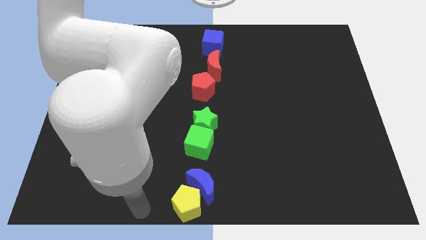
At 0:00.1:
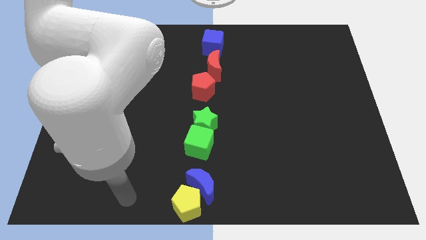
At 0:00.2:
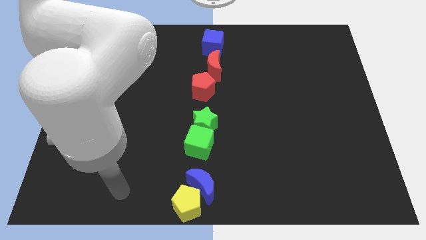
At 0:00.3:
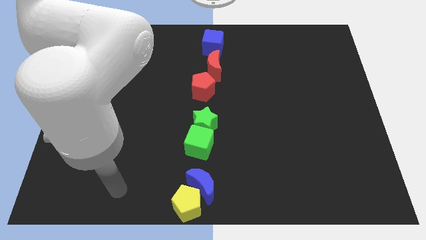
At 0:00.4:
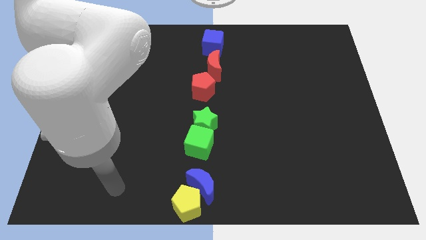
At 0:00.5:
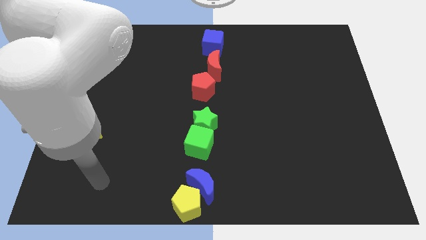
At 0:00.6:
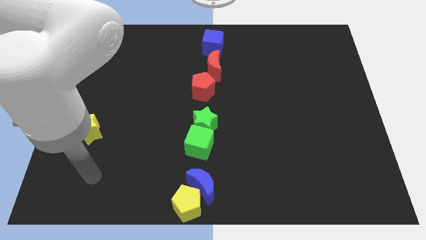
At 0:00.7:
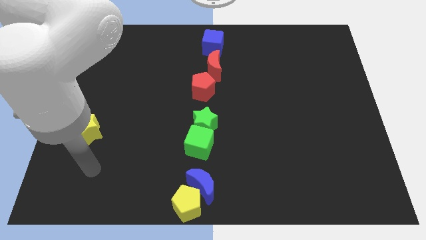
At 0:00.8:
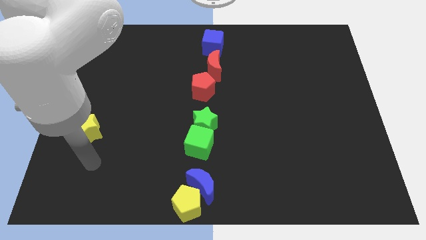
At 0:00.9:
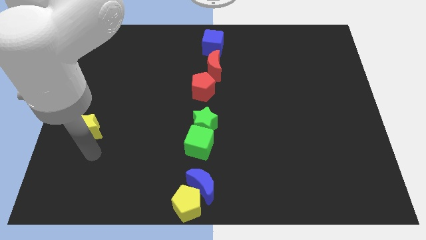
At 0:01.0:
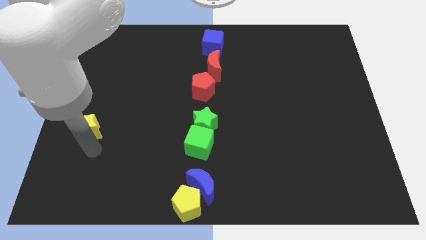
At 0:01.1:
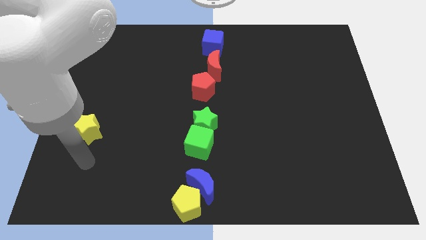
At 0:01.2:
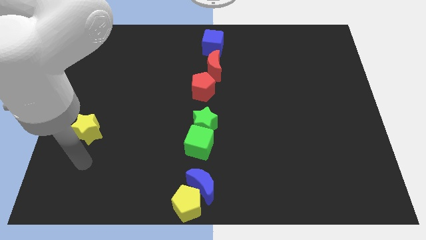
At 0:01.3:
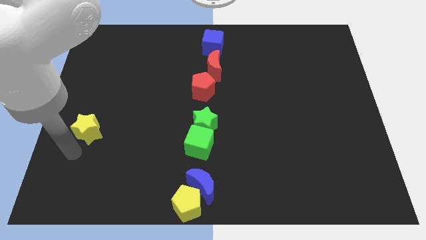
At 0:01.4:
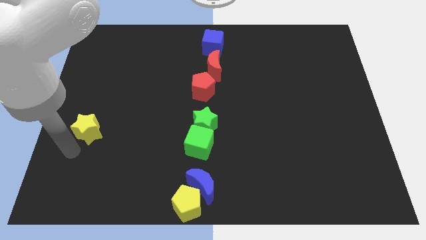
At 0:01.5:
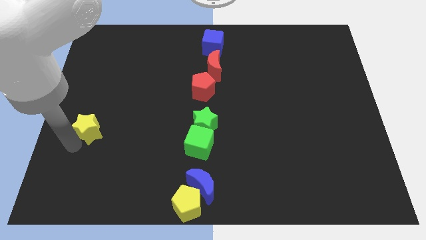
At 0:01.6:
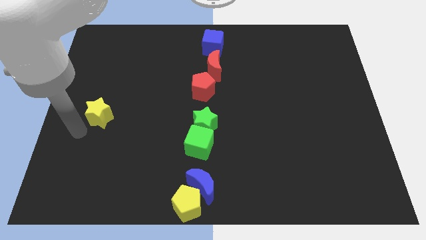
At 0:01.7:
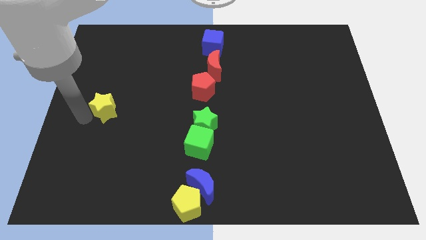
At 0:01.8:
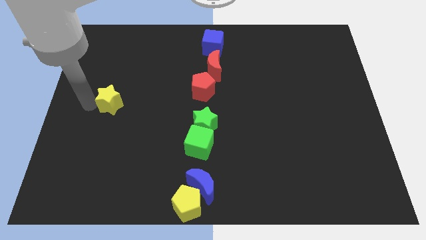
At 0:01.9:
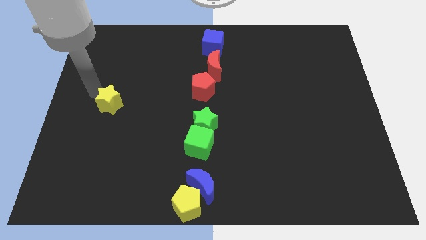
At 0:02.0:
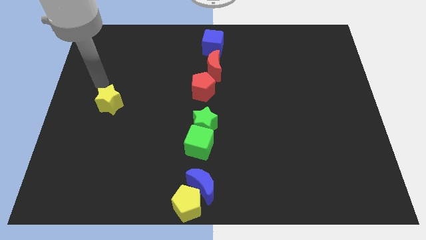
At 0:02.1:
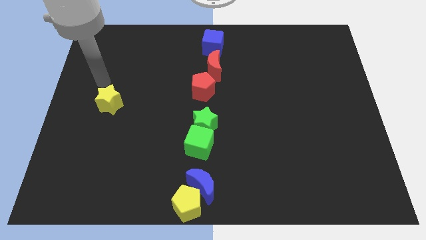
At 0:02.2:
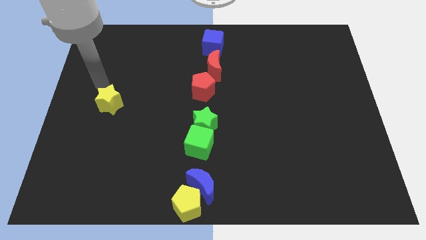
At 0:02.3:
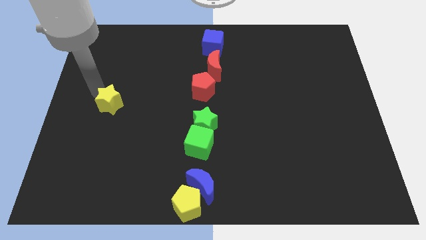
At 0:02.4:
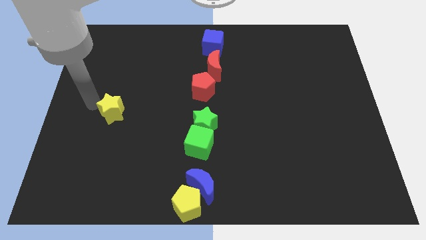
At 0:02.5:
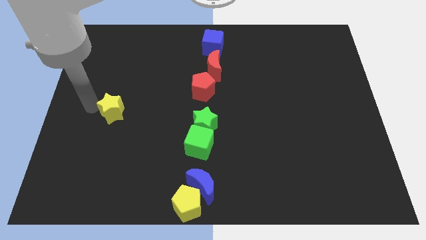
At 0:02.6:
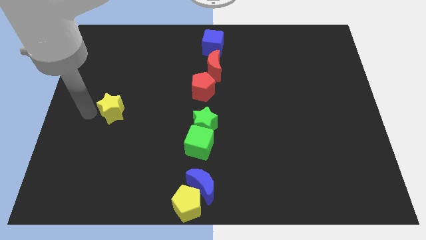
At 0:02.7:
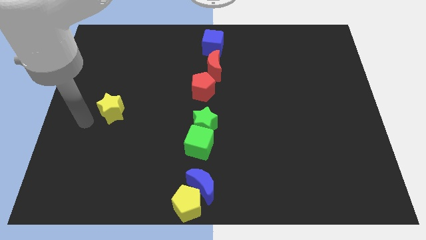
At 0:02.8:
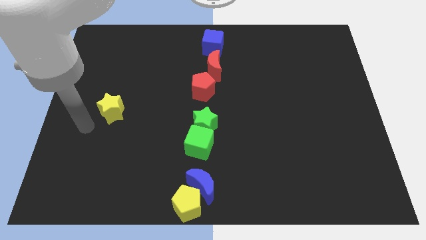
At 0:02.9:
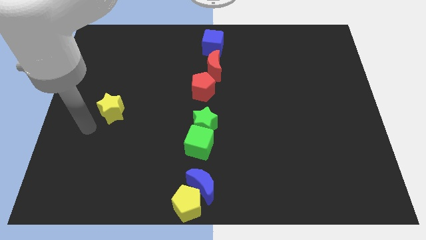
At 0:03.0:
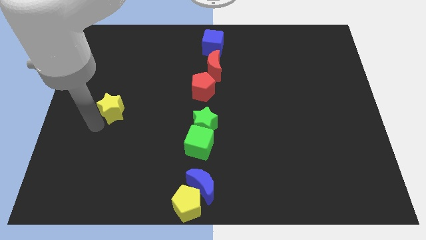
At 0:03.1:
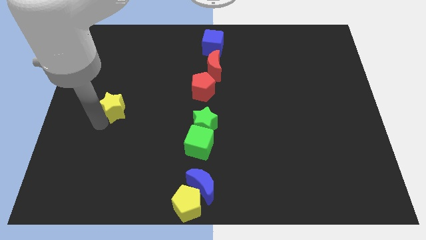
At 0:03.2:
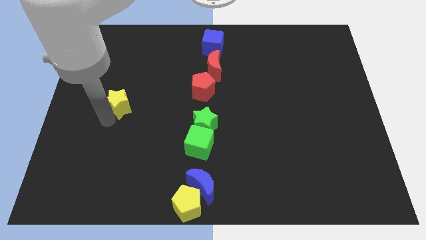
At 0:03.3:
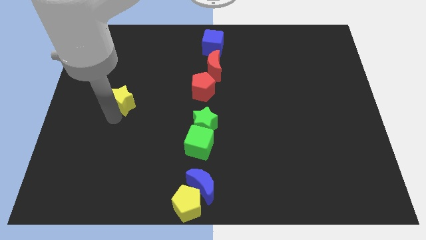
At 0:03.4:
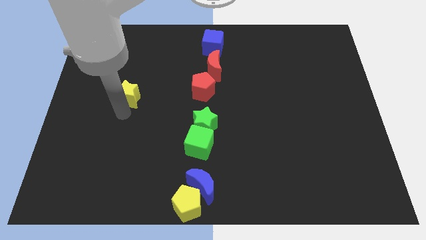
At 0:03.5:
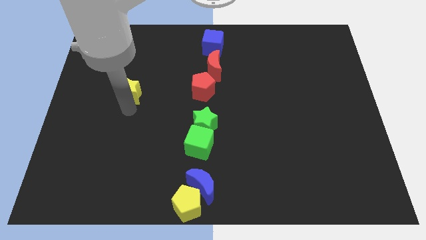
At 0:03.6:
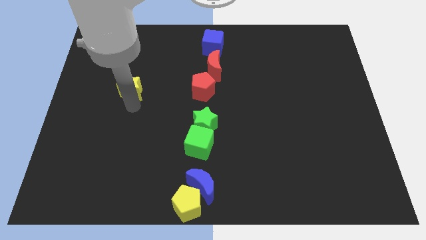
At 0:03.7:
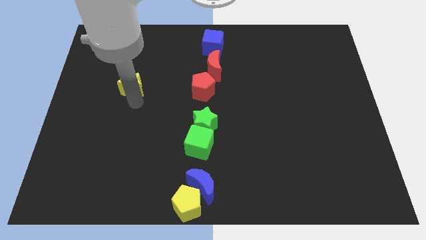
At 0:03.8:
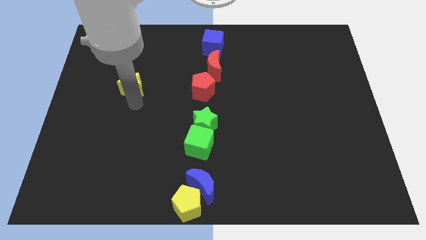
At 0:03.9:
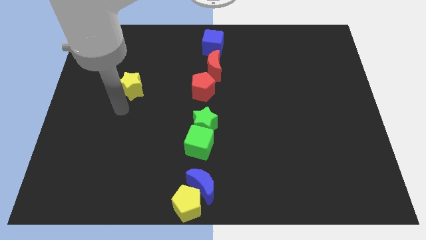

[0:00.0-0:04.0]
move the yellow star to the top of the board

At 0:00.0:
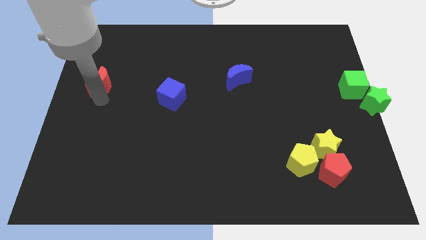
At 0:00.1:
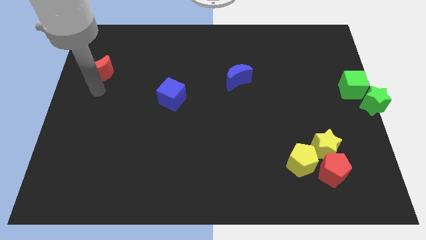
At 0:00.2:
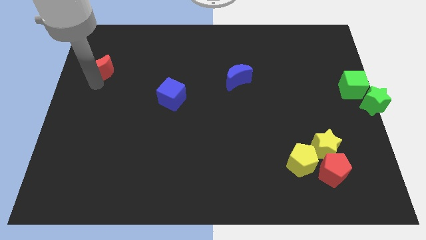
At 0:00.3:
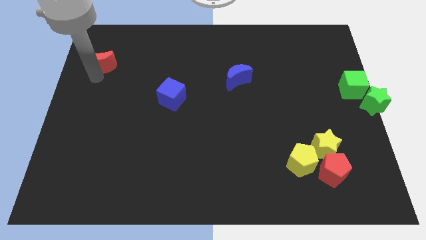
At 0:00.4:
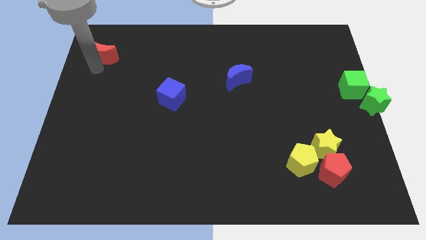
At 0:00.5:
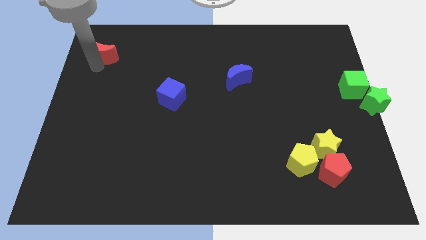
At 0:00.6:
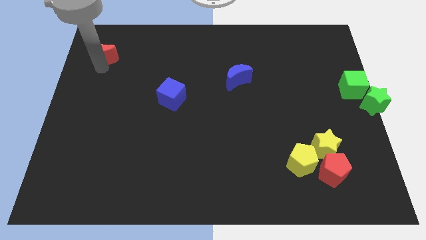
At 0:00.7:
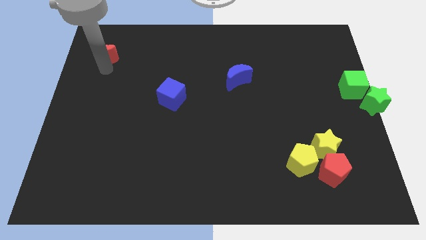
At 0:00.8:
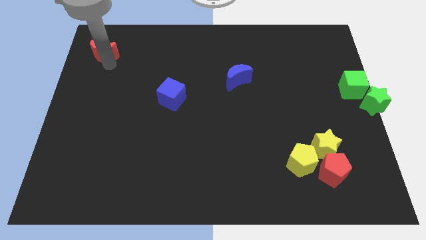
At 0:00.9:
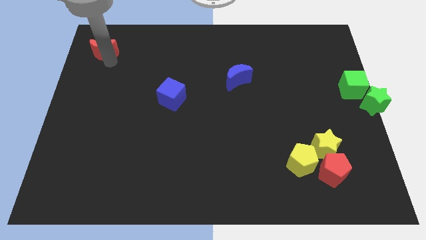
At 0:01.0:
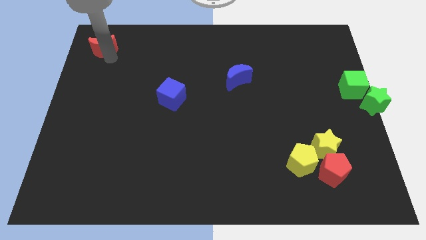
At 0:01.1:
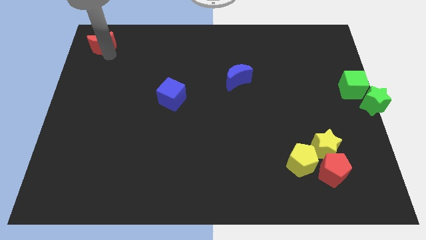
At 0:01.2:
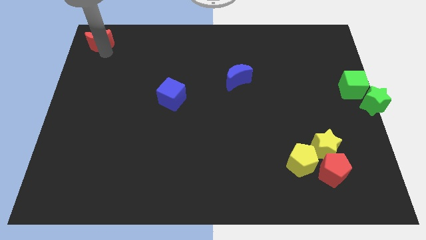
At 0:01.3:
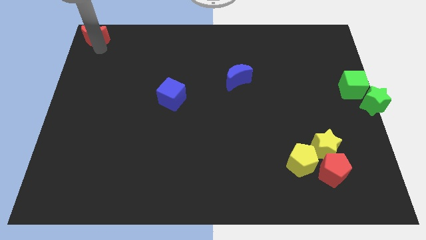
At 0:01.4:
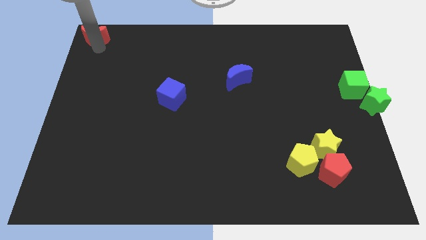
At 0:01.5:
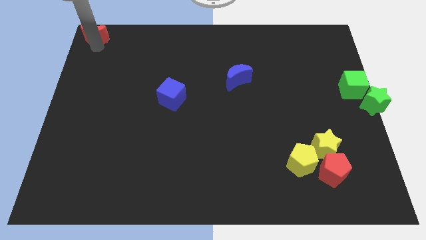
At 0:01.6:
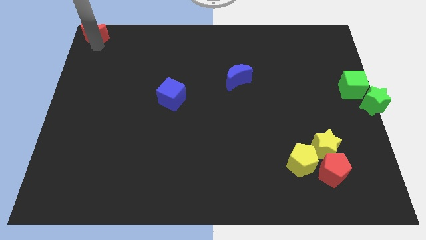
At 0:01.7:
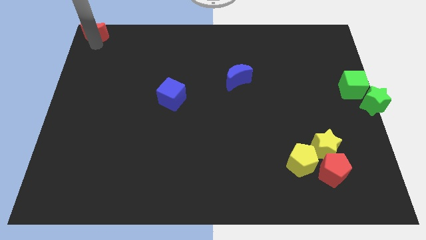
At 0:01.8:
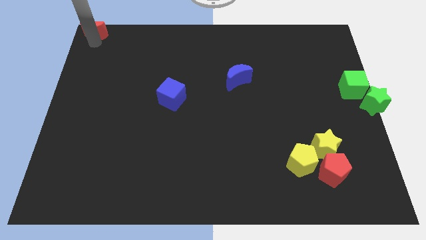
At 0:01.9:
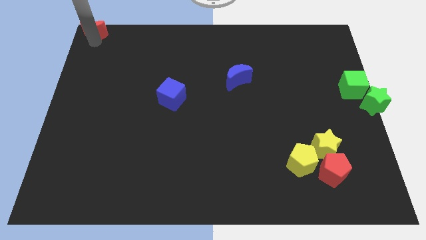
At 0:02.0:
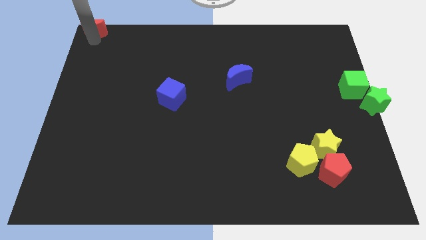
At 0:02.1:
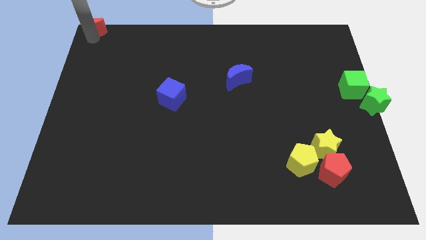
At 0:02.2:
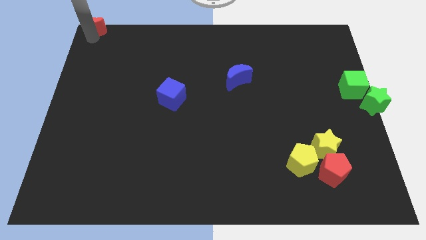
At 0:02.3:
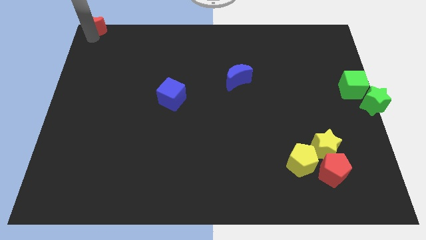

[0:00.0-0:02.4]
push the red crescent towards the top left corner of the board

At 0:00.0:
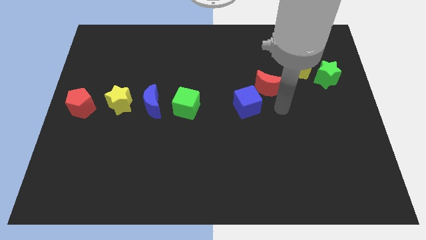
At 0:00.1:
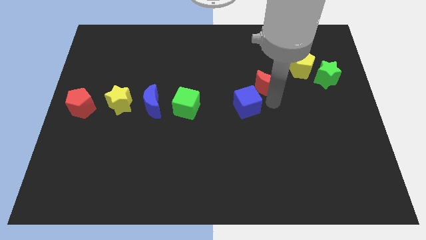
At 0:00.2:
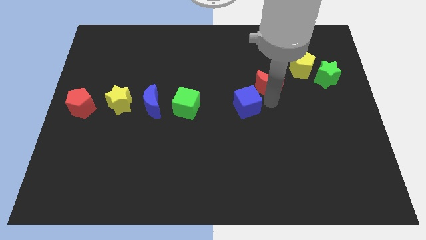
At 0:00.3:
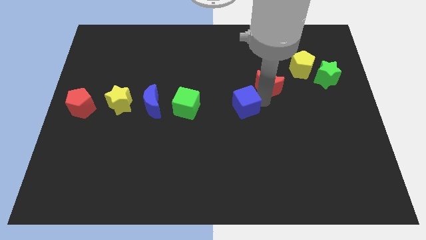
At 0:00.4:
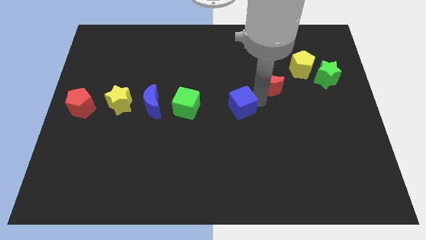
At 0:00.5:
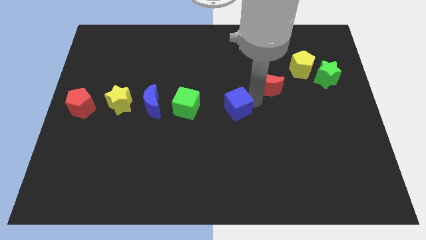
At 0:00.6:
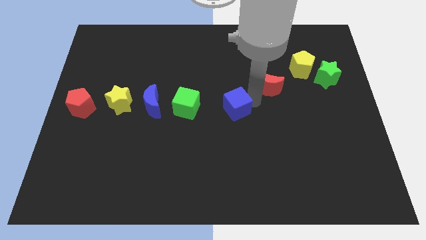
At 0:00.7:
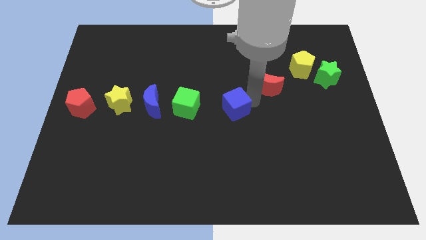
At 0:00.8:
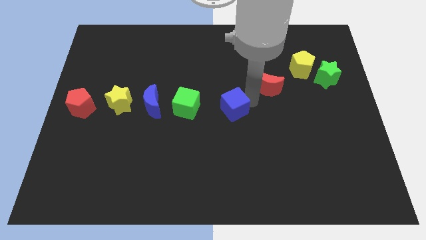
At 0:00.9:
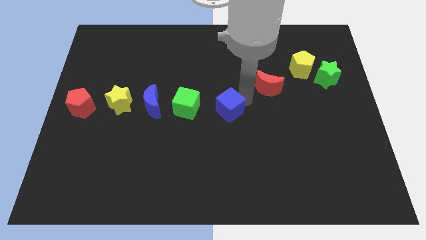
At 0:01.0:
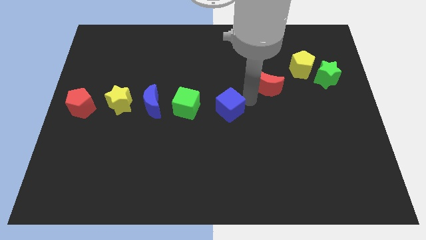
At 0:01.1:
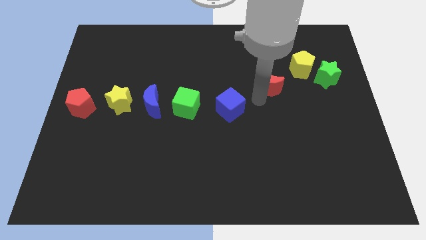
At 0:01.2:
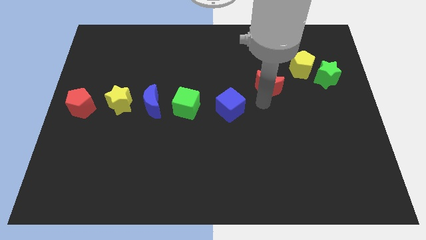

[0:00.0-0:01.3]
place the blue cube to the right side of the green cube

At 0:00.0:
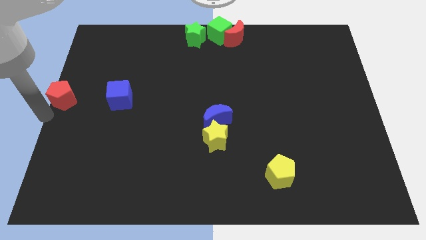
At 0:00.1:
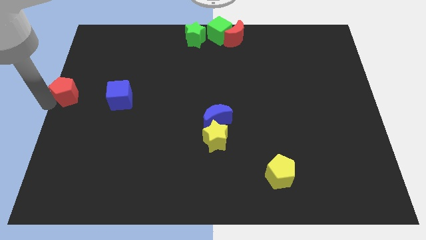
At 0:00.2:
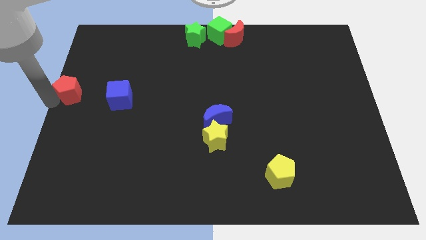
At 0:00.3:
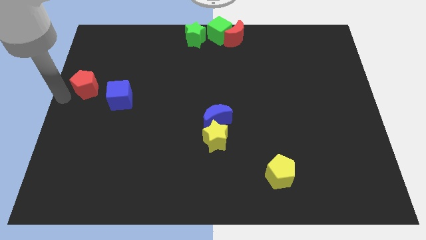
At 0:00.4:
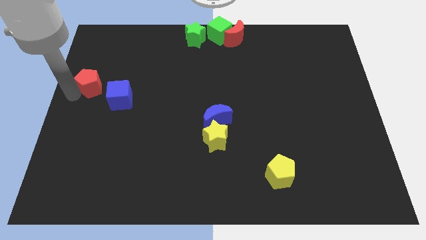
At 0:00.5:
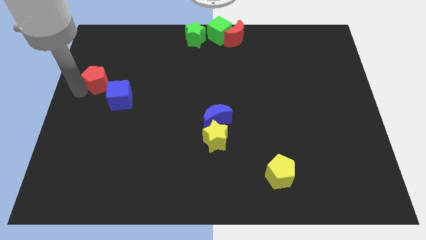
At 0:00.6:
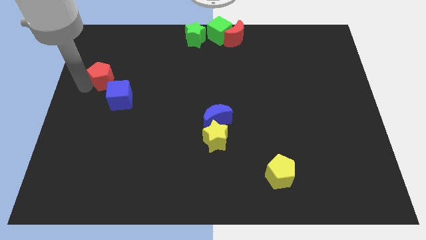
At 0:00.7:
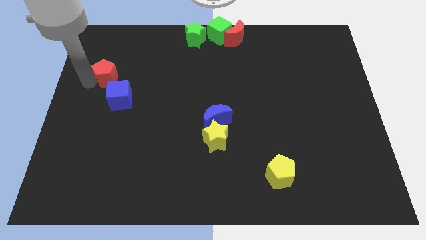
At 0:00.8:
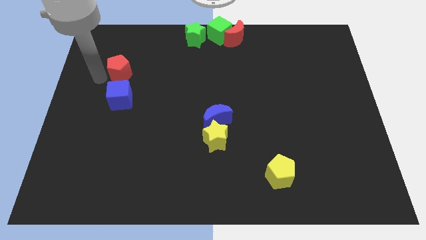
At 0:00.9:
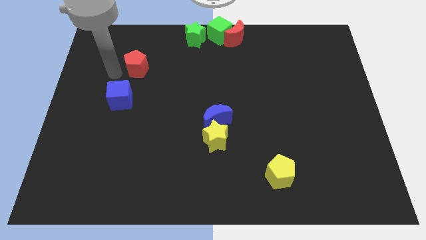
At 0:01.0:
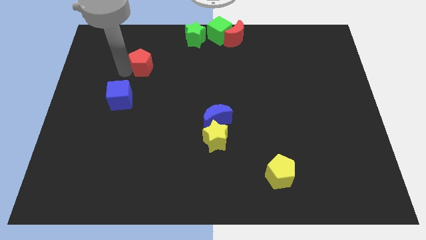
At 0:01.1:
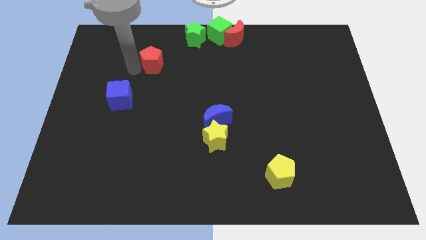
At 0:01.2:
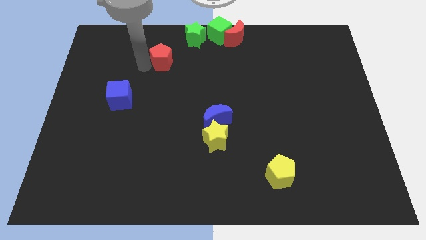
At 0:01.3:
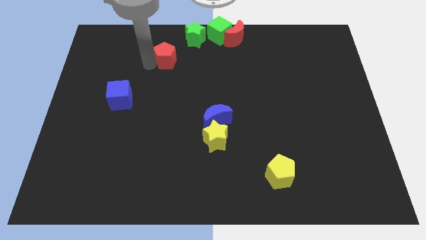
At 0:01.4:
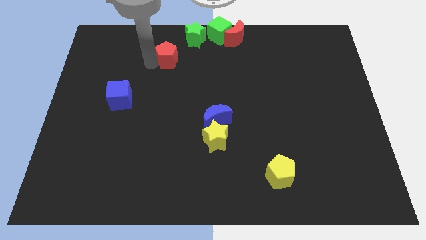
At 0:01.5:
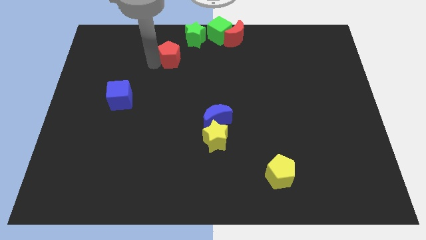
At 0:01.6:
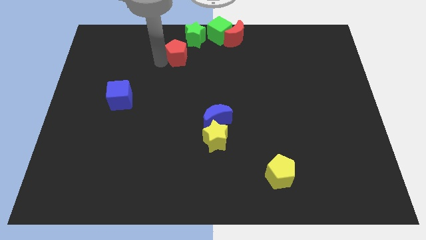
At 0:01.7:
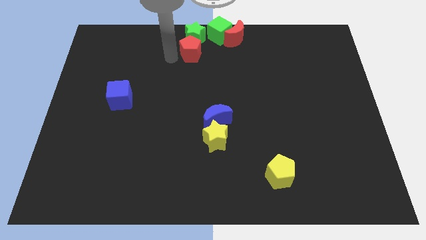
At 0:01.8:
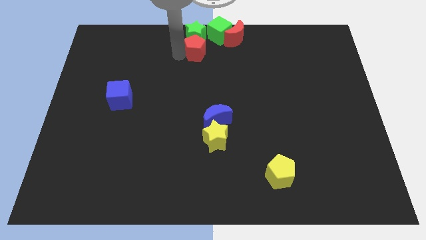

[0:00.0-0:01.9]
place the red pentagon below the green star
